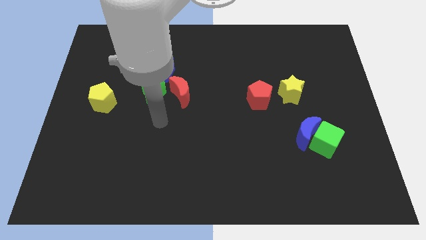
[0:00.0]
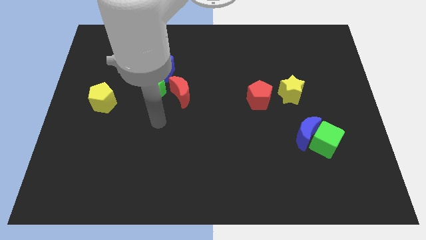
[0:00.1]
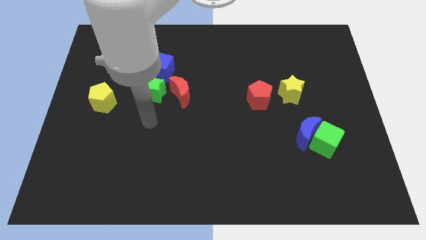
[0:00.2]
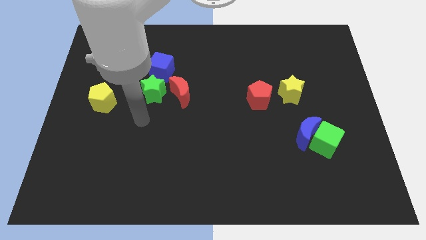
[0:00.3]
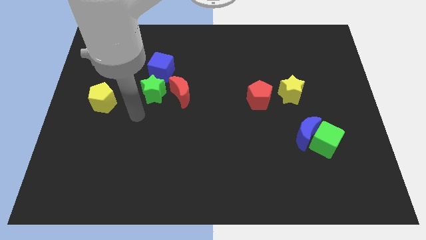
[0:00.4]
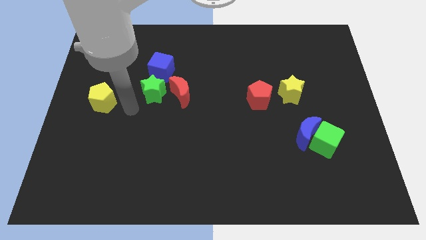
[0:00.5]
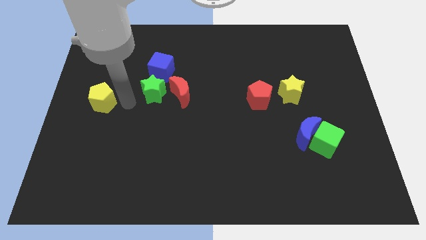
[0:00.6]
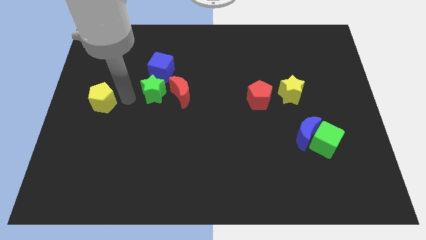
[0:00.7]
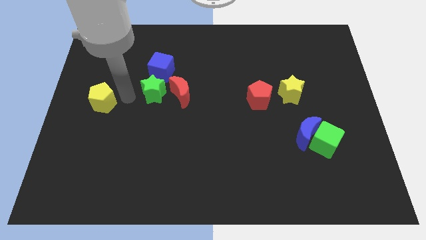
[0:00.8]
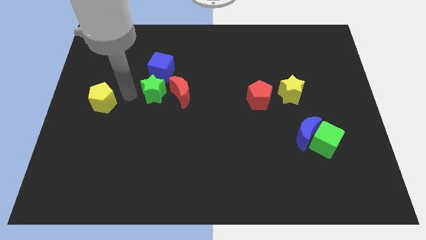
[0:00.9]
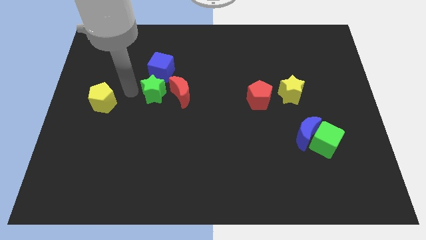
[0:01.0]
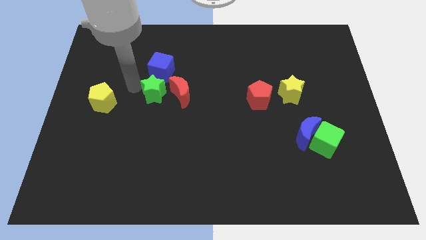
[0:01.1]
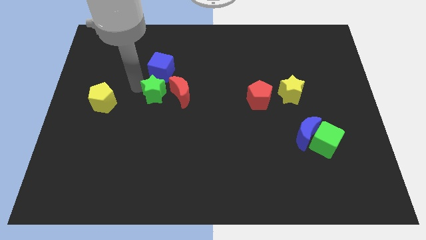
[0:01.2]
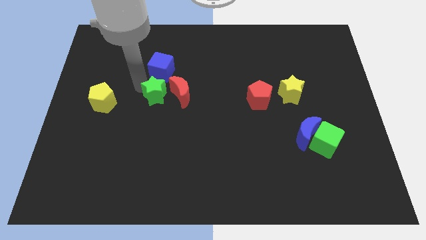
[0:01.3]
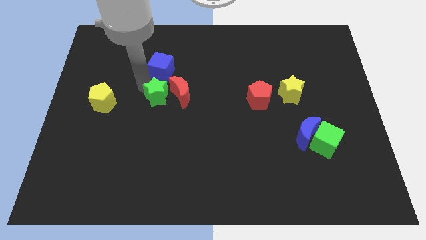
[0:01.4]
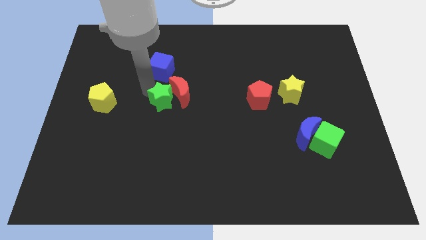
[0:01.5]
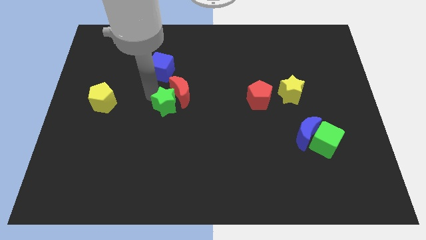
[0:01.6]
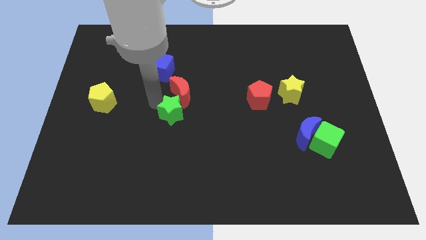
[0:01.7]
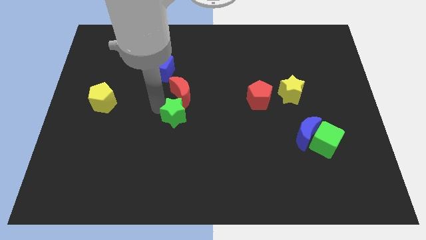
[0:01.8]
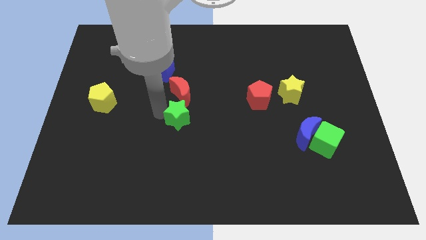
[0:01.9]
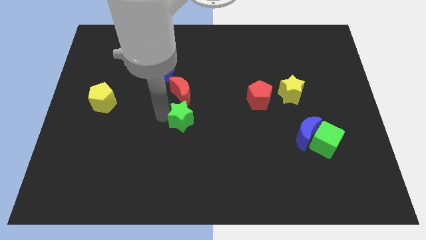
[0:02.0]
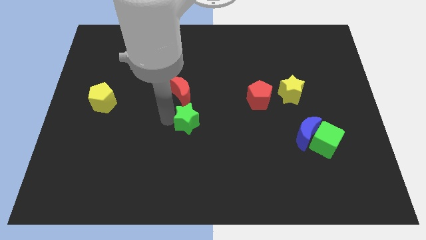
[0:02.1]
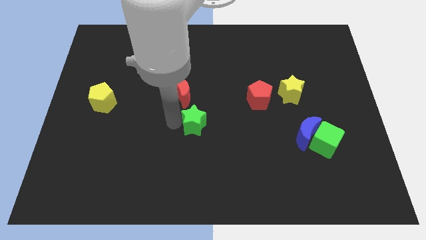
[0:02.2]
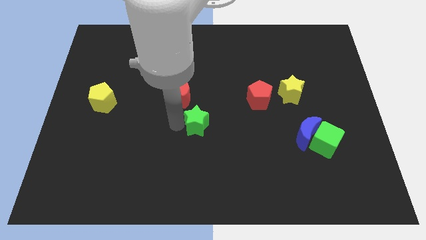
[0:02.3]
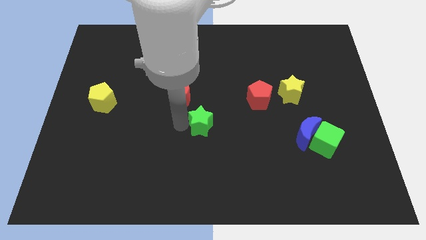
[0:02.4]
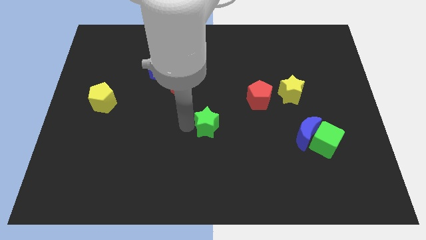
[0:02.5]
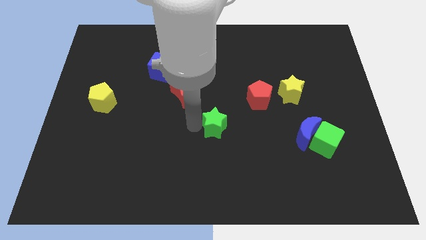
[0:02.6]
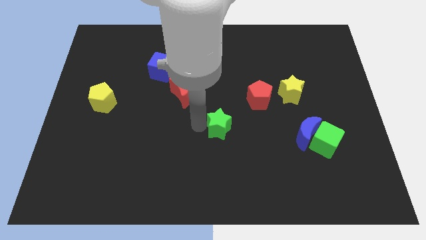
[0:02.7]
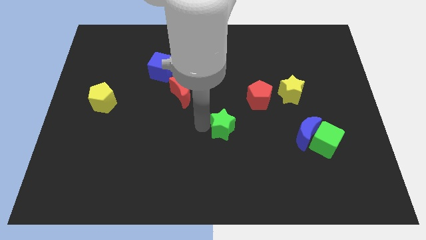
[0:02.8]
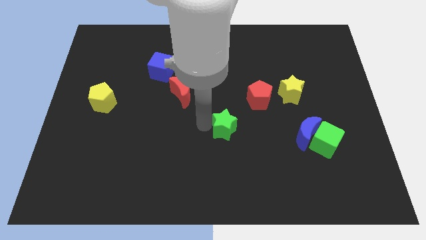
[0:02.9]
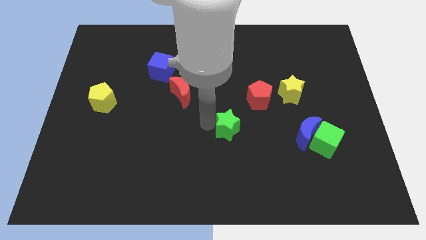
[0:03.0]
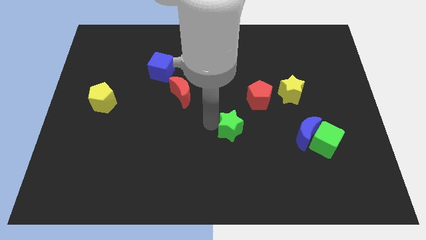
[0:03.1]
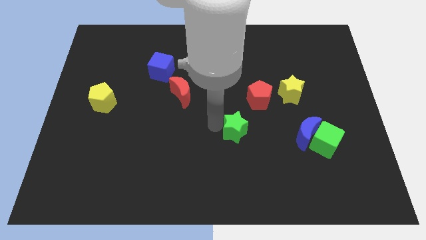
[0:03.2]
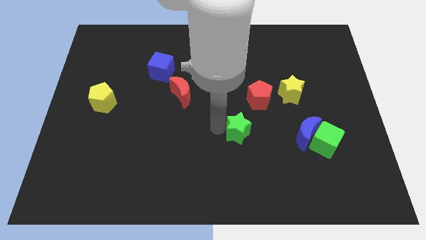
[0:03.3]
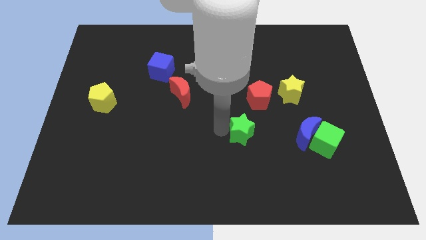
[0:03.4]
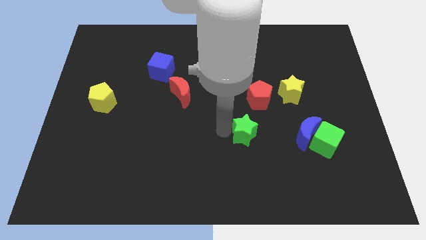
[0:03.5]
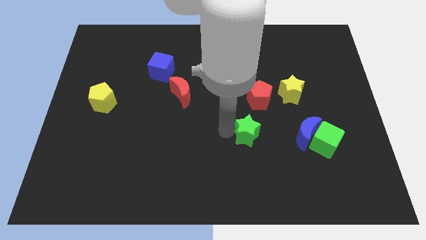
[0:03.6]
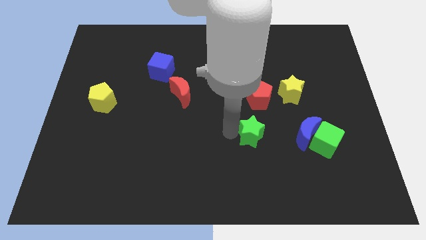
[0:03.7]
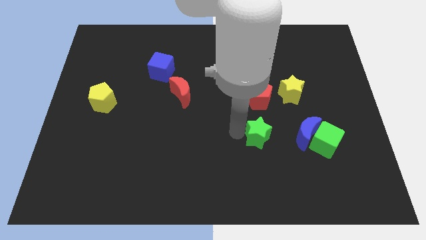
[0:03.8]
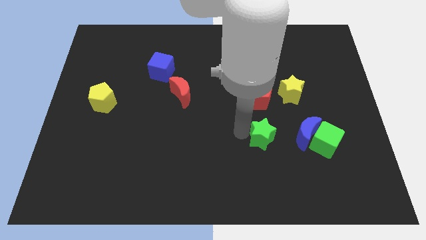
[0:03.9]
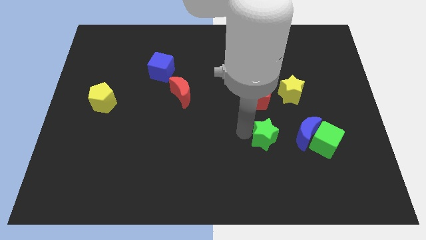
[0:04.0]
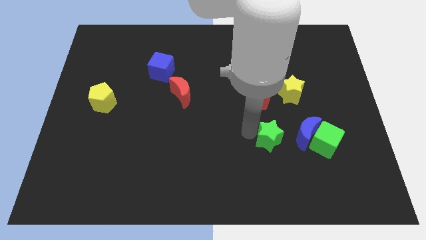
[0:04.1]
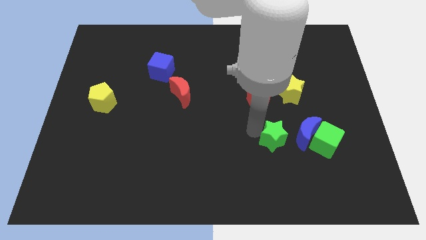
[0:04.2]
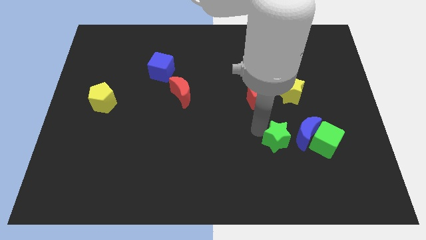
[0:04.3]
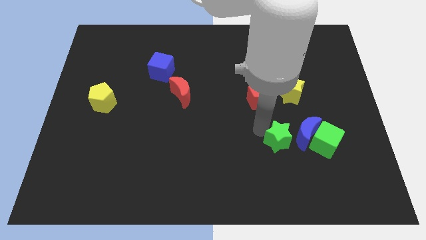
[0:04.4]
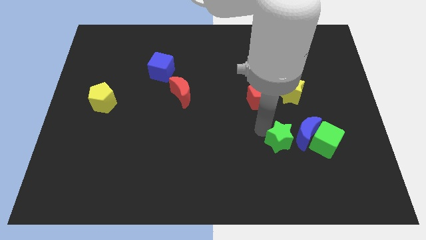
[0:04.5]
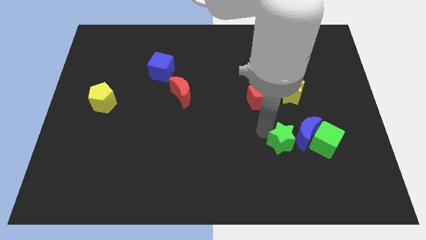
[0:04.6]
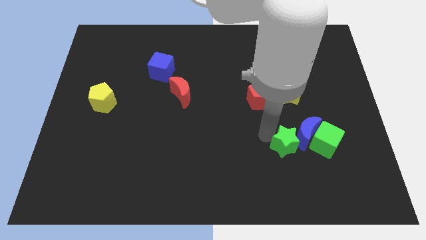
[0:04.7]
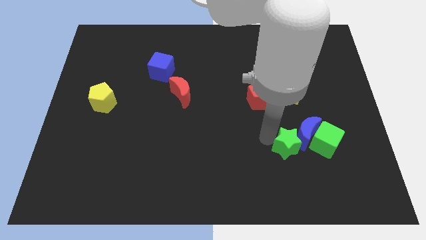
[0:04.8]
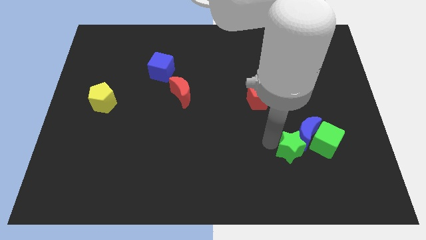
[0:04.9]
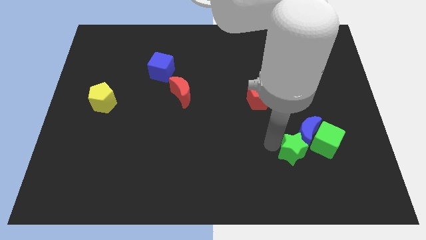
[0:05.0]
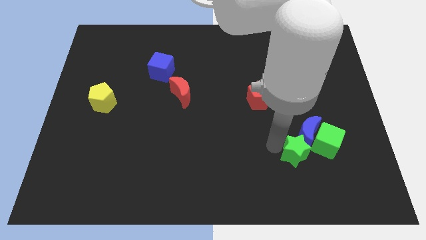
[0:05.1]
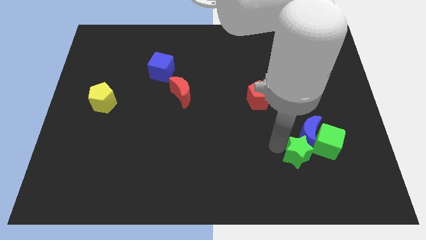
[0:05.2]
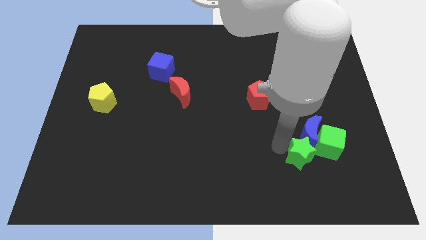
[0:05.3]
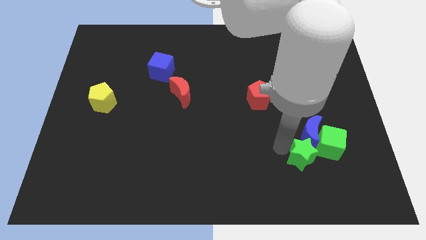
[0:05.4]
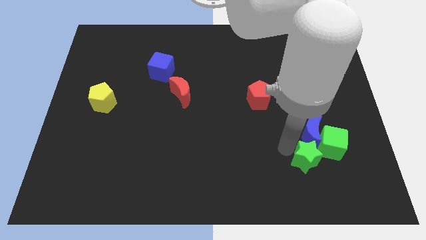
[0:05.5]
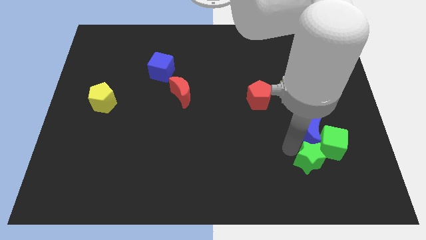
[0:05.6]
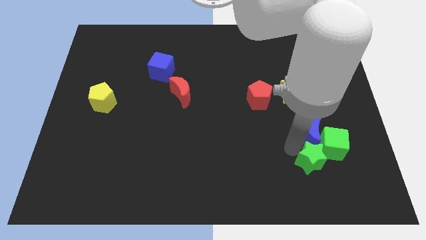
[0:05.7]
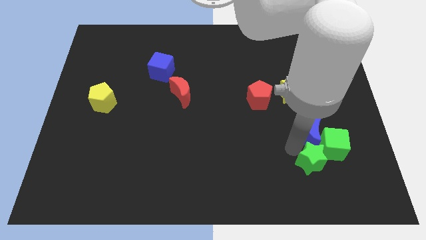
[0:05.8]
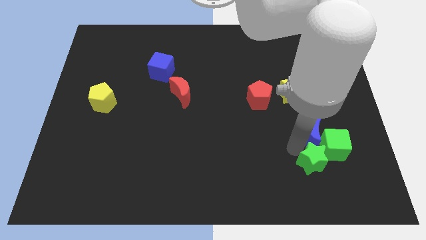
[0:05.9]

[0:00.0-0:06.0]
put the green star close to the green cube

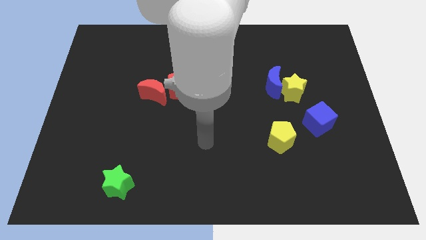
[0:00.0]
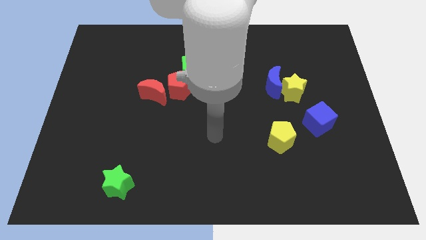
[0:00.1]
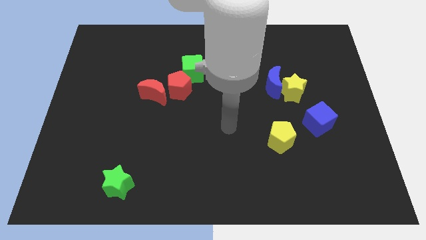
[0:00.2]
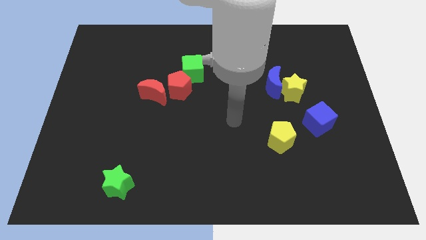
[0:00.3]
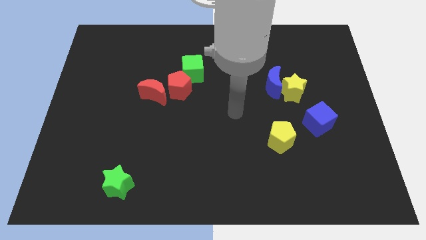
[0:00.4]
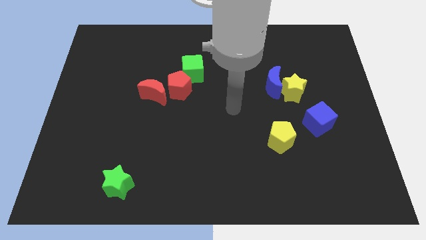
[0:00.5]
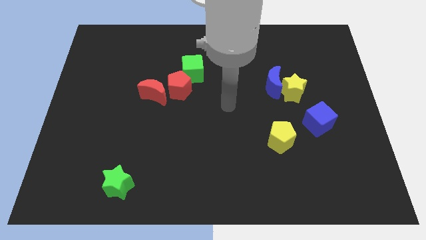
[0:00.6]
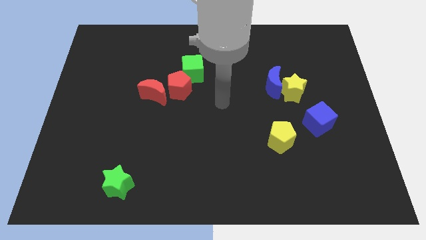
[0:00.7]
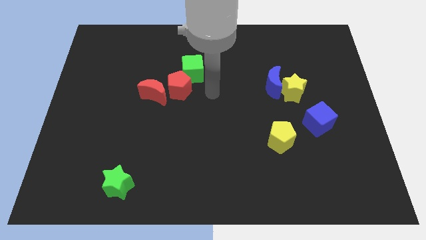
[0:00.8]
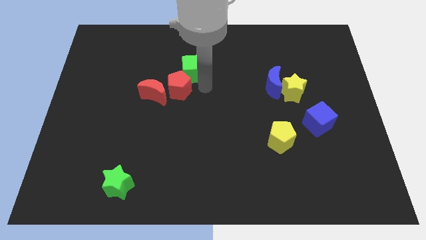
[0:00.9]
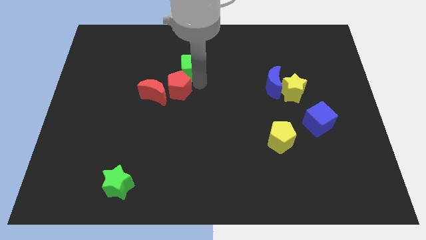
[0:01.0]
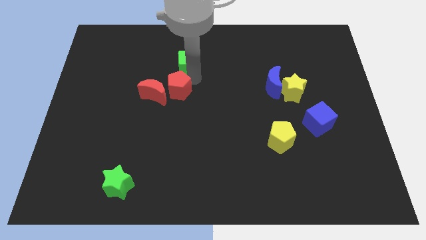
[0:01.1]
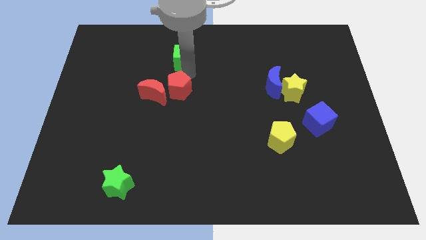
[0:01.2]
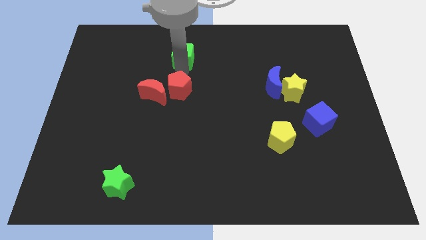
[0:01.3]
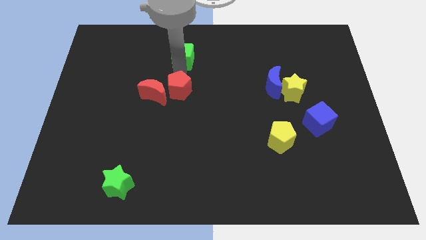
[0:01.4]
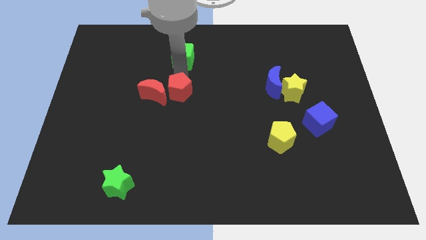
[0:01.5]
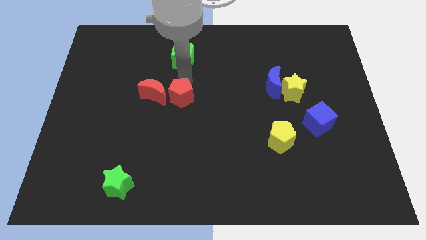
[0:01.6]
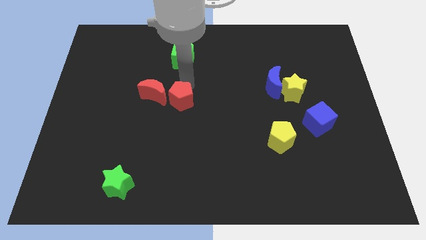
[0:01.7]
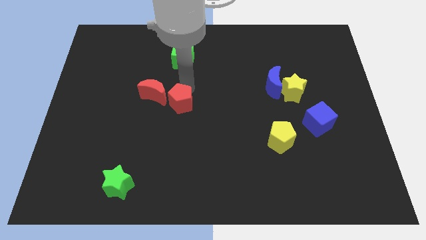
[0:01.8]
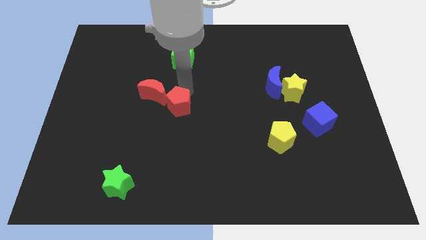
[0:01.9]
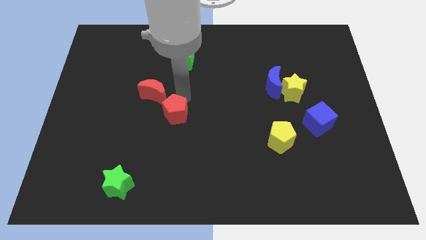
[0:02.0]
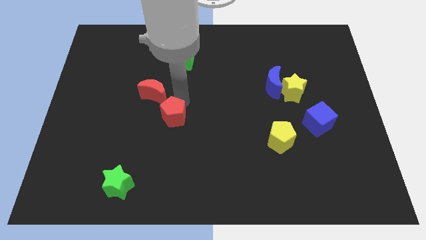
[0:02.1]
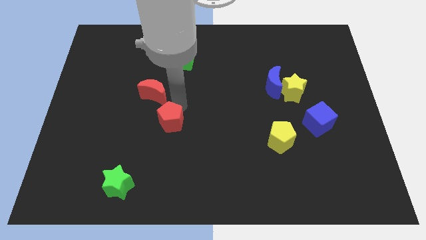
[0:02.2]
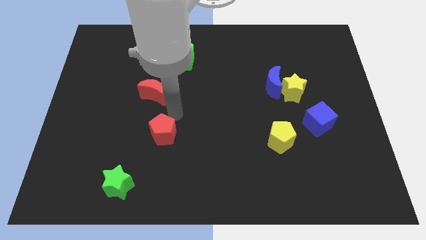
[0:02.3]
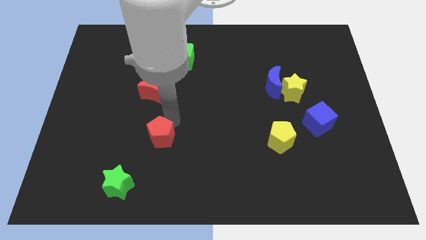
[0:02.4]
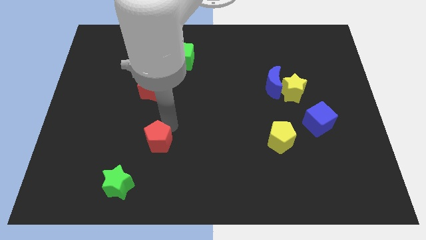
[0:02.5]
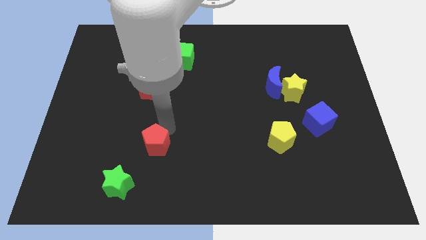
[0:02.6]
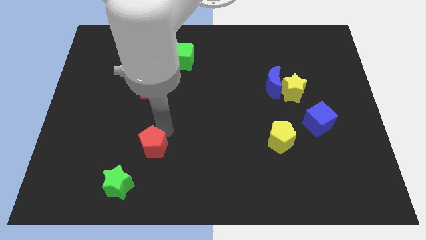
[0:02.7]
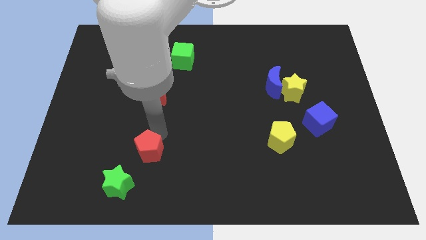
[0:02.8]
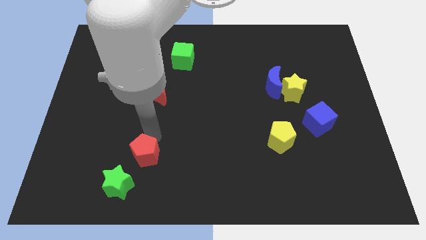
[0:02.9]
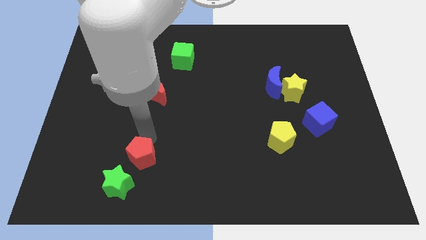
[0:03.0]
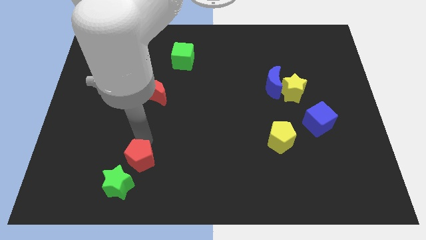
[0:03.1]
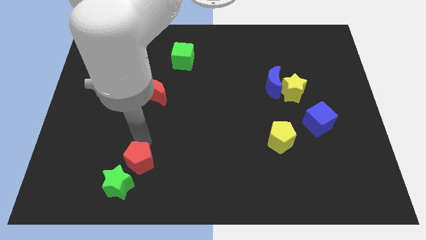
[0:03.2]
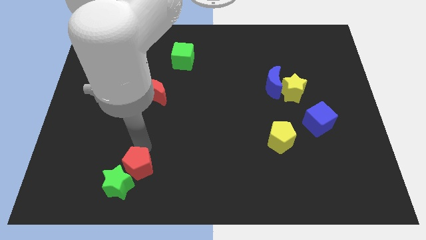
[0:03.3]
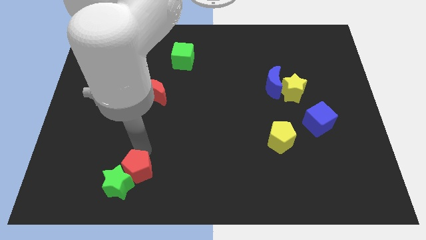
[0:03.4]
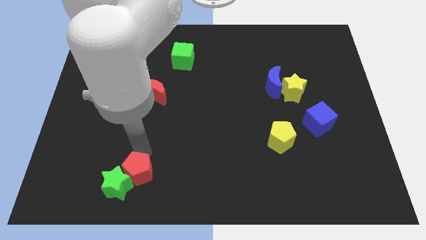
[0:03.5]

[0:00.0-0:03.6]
push the red pentagon to the green star
